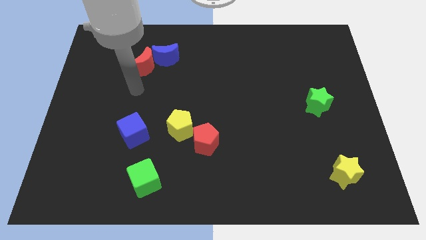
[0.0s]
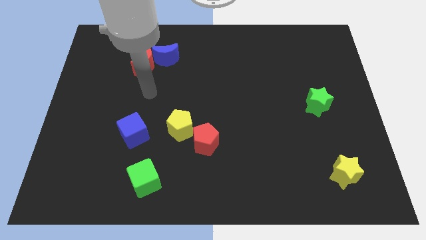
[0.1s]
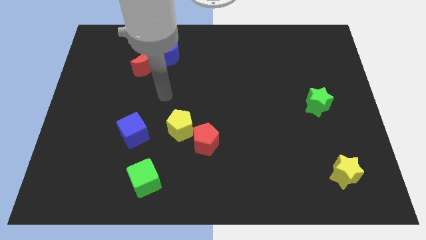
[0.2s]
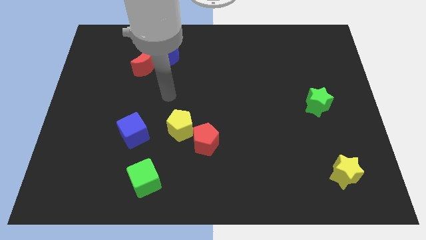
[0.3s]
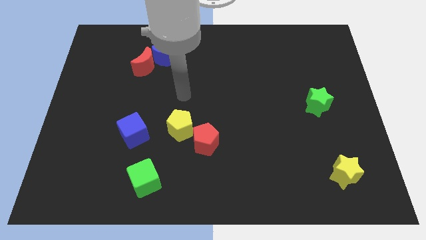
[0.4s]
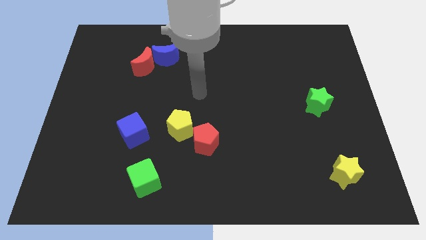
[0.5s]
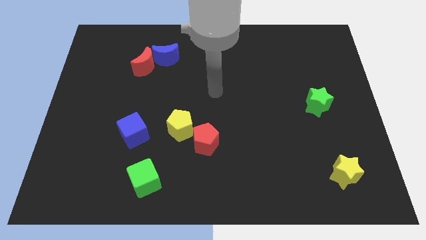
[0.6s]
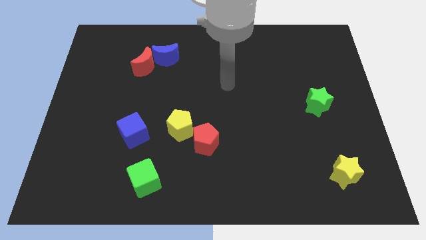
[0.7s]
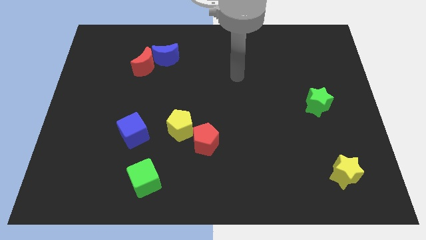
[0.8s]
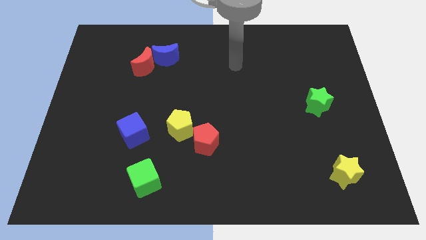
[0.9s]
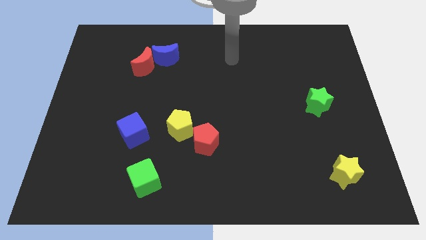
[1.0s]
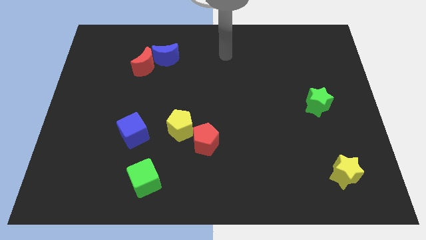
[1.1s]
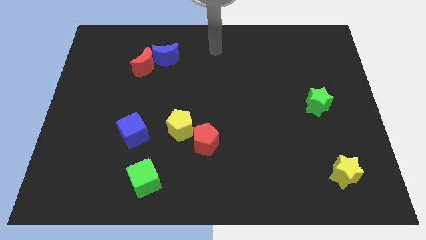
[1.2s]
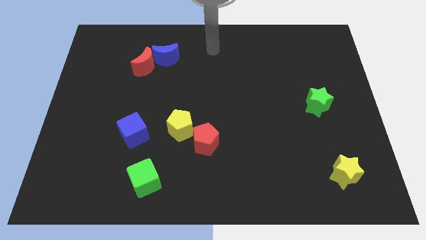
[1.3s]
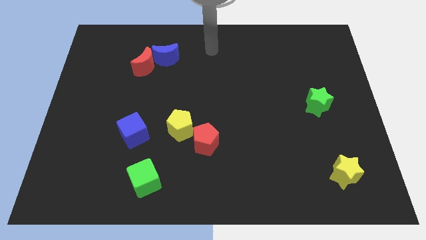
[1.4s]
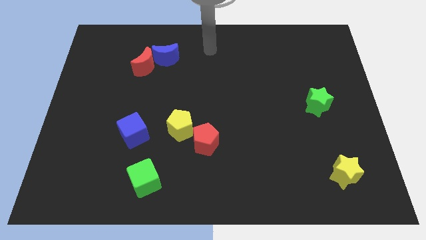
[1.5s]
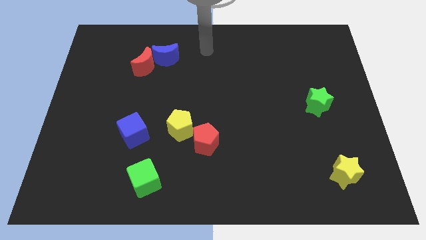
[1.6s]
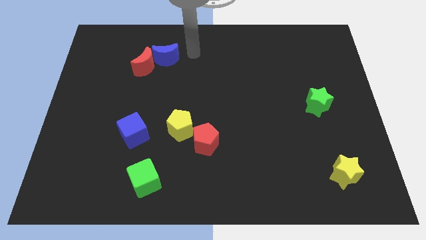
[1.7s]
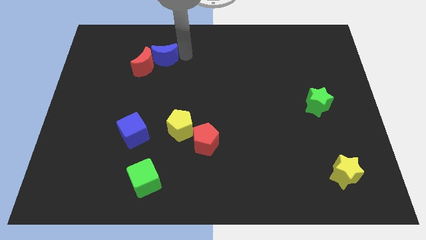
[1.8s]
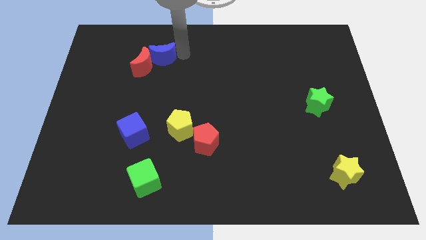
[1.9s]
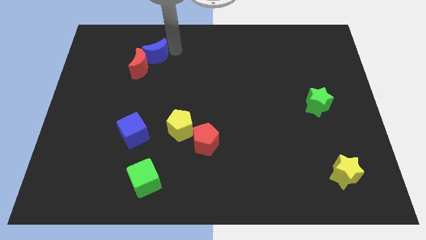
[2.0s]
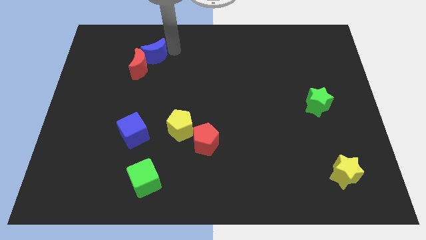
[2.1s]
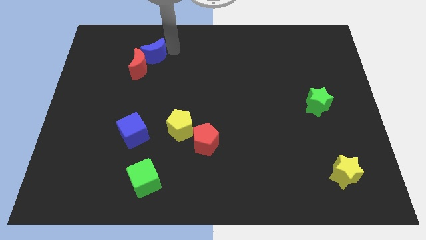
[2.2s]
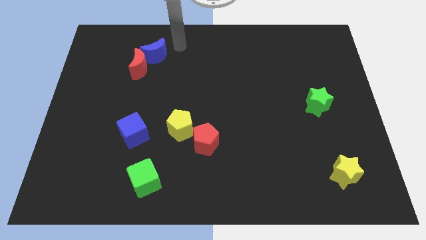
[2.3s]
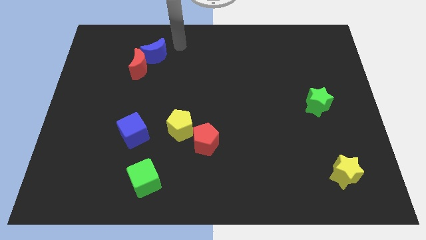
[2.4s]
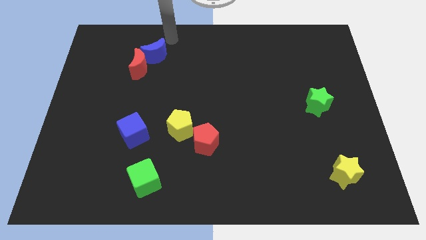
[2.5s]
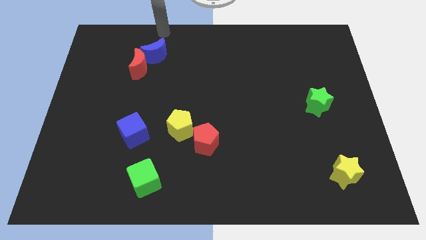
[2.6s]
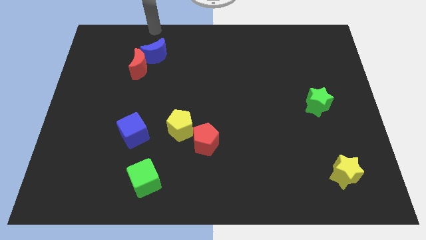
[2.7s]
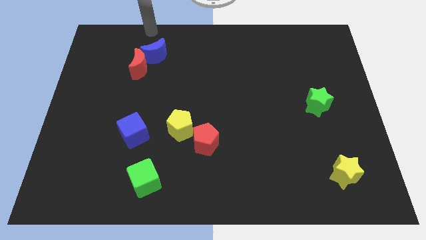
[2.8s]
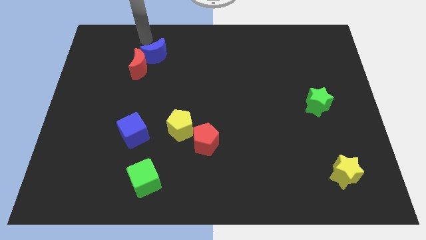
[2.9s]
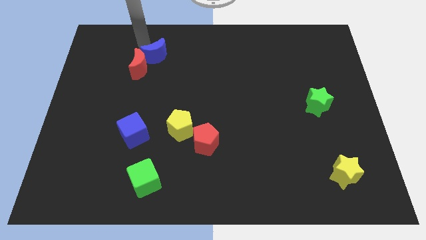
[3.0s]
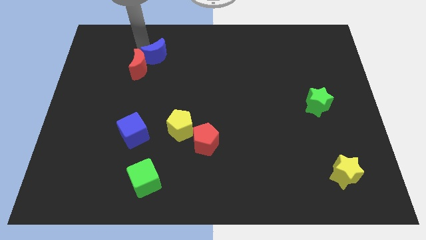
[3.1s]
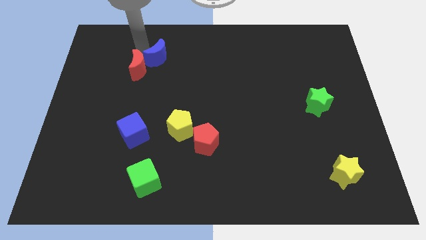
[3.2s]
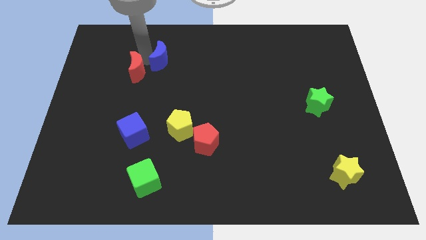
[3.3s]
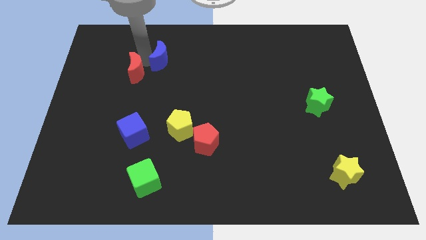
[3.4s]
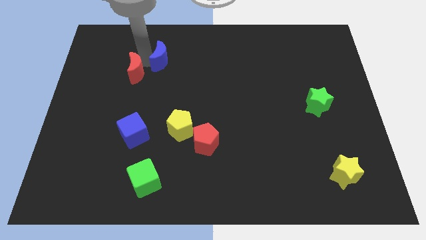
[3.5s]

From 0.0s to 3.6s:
point your arm between red moon and blue moon

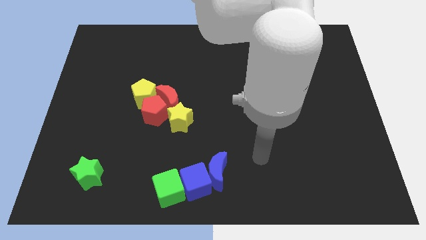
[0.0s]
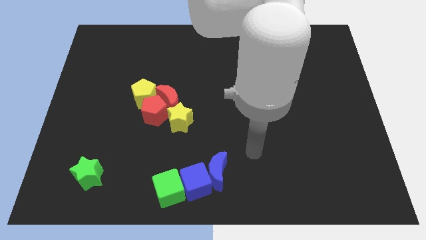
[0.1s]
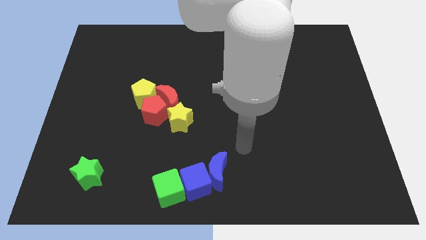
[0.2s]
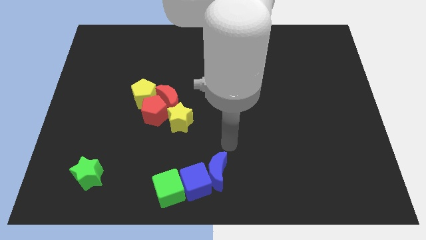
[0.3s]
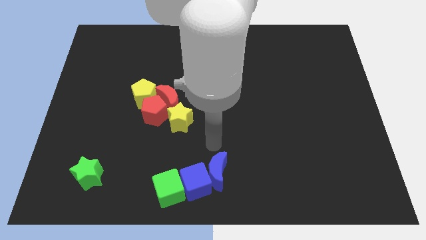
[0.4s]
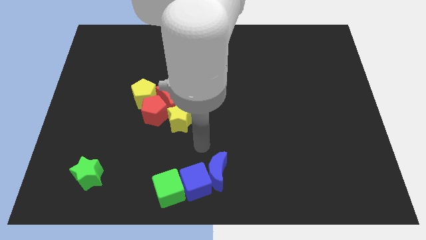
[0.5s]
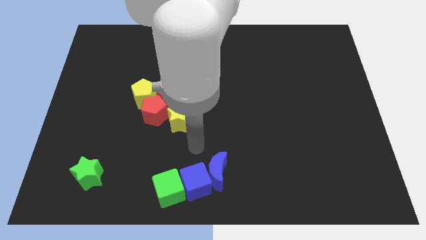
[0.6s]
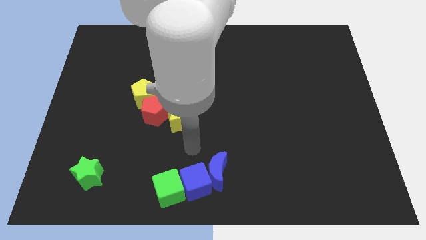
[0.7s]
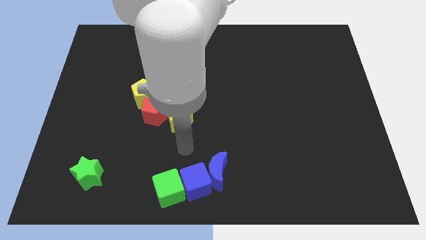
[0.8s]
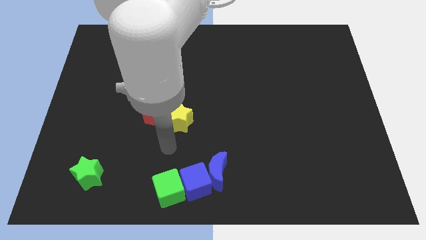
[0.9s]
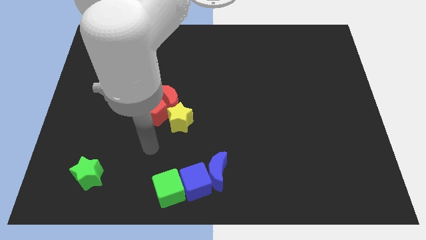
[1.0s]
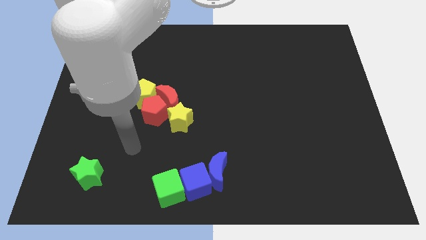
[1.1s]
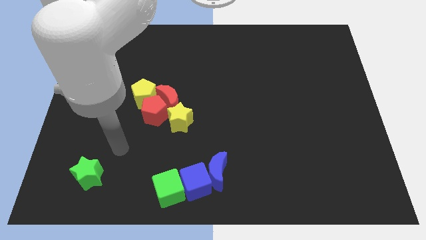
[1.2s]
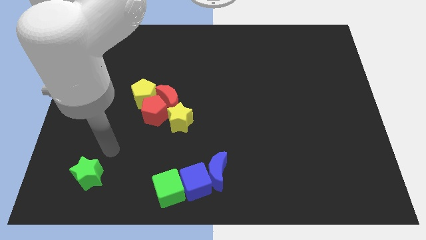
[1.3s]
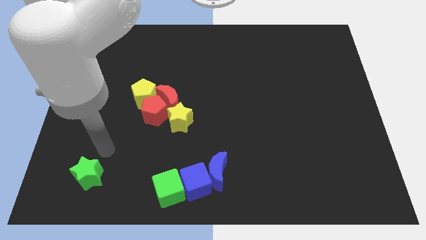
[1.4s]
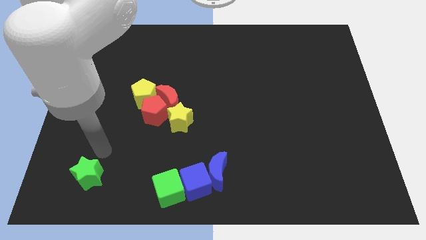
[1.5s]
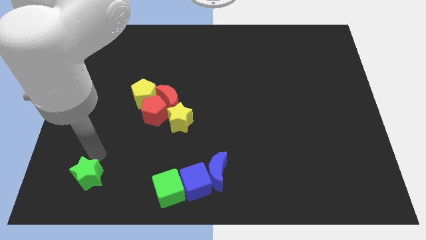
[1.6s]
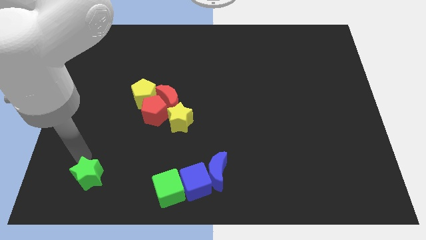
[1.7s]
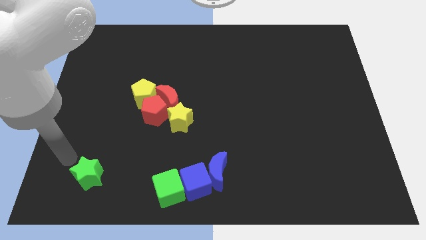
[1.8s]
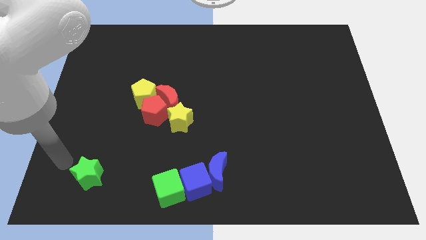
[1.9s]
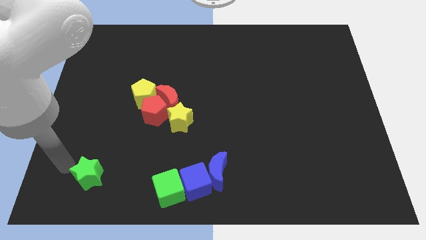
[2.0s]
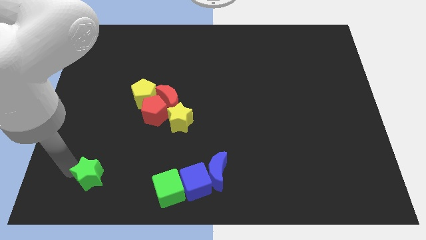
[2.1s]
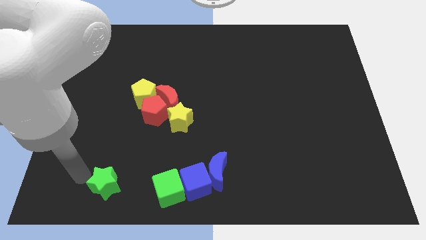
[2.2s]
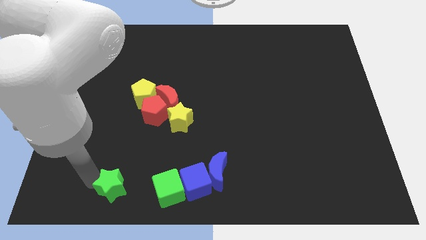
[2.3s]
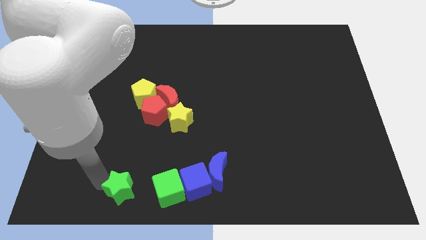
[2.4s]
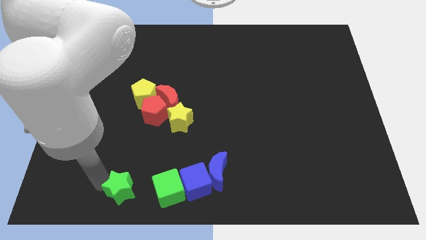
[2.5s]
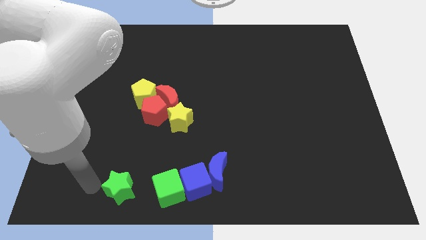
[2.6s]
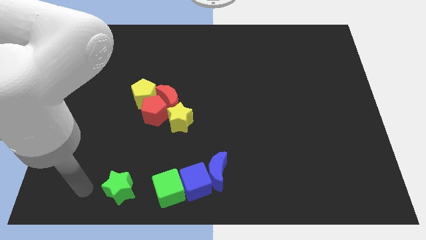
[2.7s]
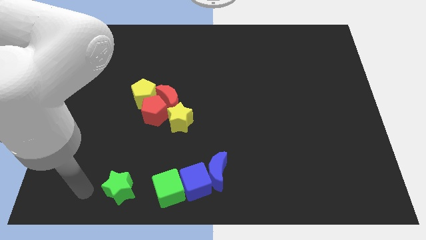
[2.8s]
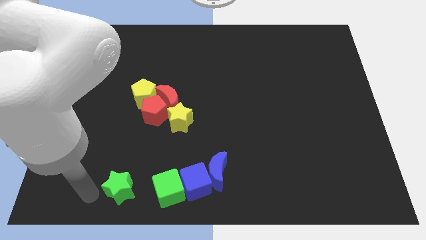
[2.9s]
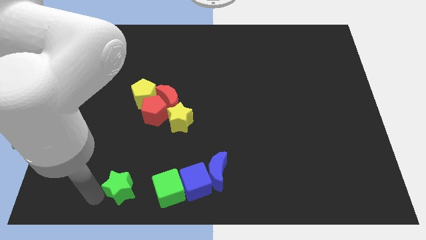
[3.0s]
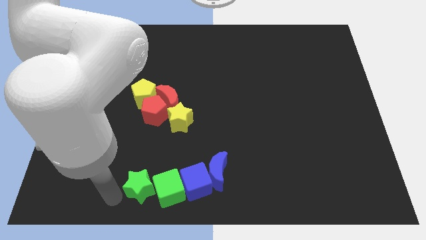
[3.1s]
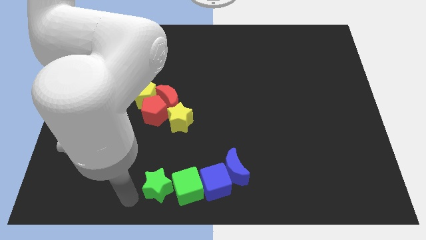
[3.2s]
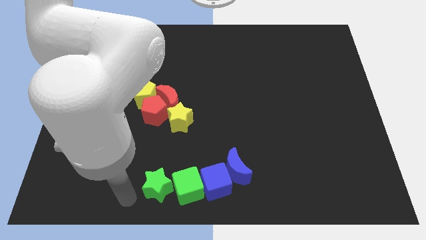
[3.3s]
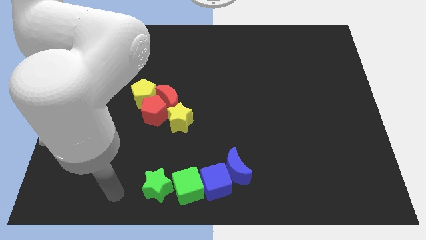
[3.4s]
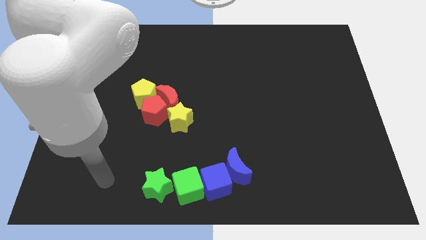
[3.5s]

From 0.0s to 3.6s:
push green star beside green cube

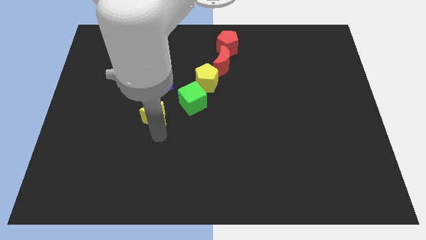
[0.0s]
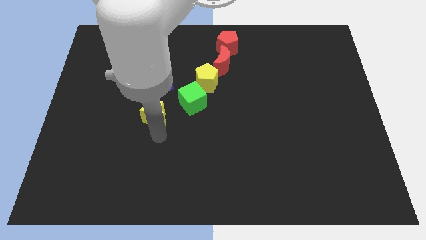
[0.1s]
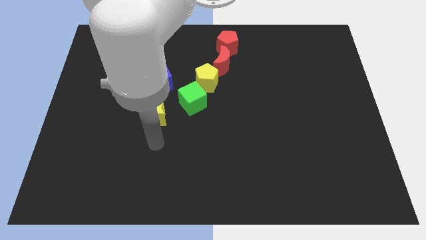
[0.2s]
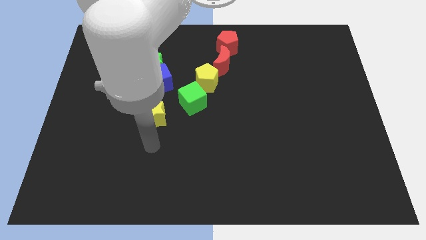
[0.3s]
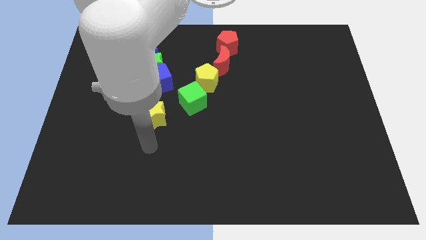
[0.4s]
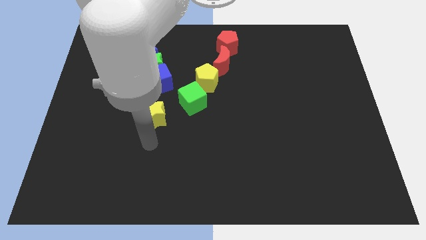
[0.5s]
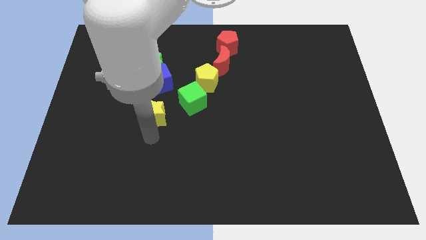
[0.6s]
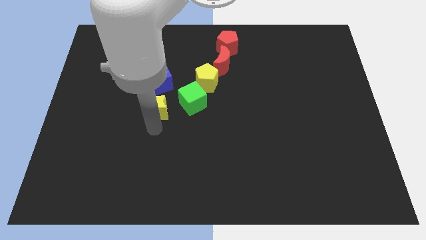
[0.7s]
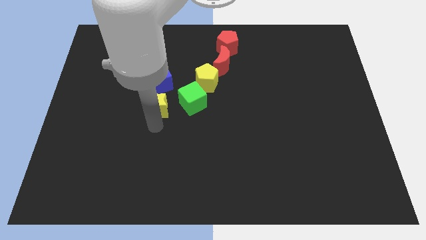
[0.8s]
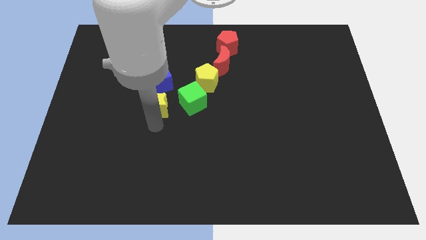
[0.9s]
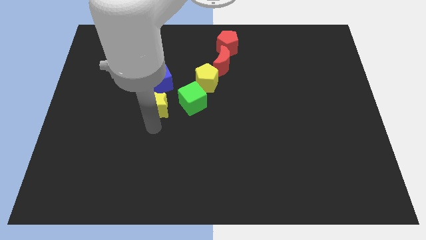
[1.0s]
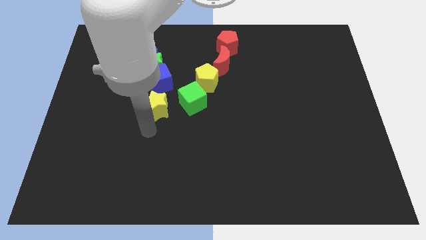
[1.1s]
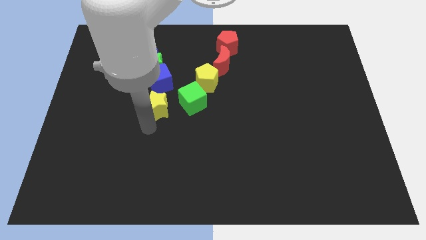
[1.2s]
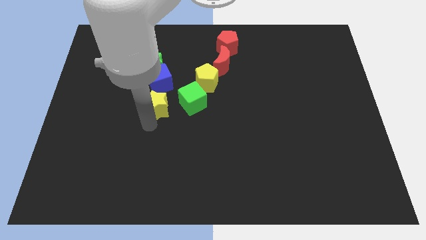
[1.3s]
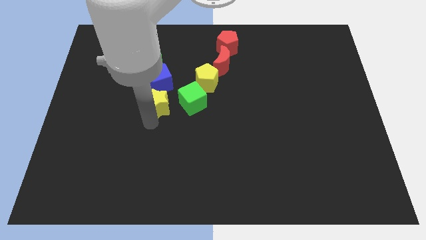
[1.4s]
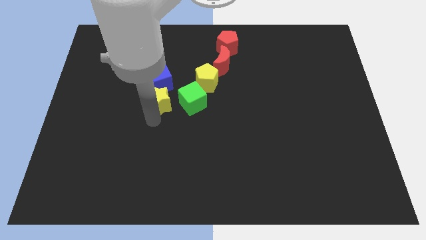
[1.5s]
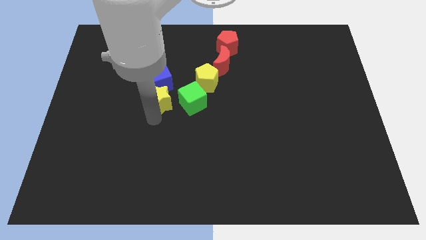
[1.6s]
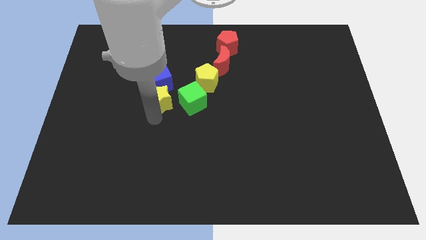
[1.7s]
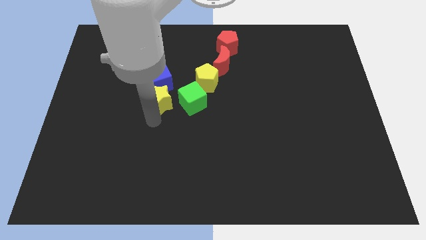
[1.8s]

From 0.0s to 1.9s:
slide the yellow star parallel left to the green cube

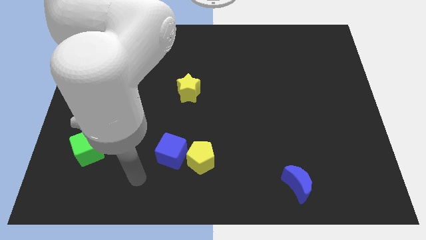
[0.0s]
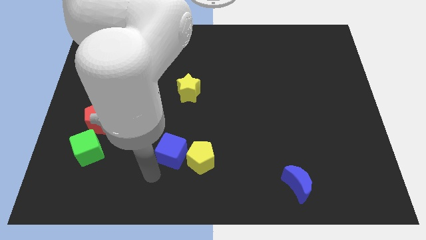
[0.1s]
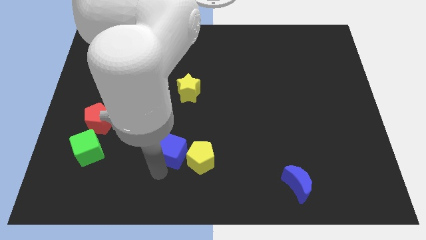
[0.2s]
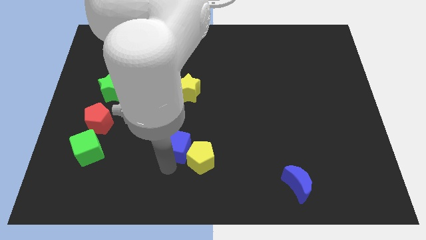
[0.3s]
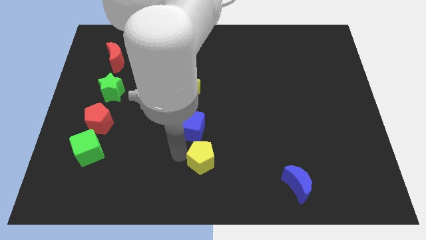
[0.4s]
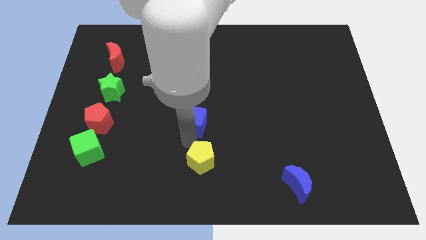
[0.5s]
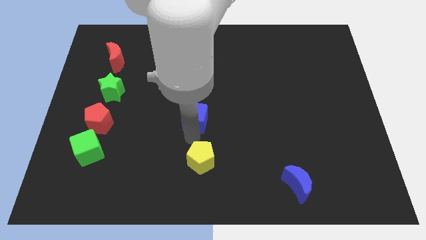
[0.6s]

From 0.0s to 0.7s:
separate the blue cube from the yellow pentagon
